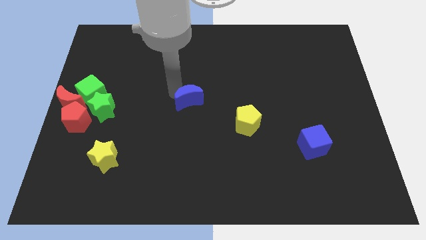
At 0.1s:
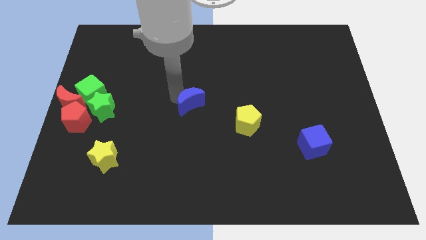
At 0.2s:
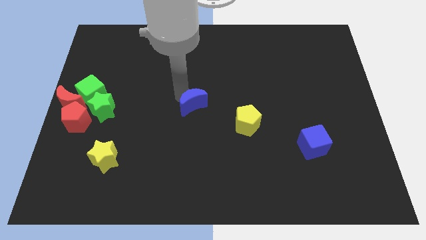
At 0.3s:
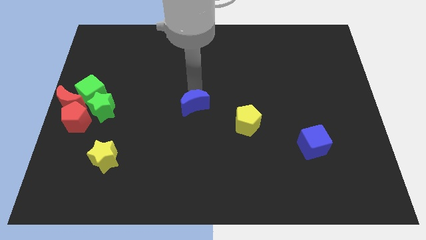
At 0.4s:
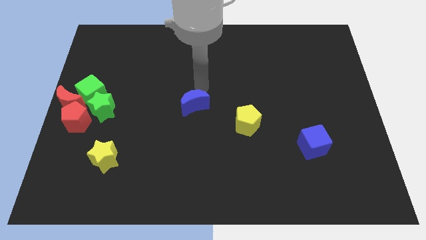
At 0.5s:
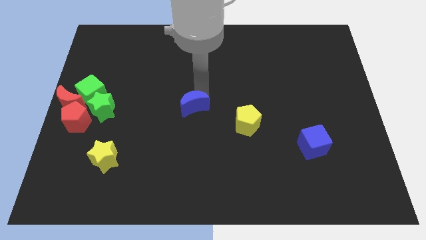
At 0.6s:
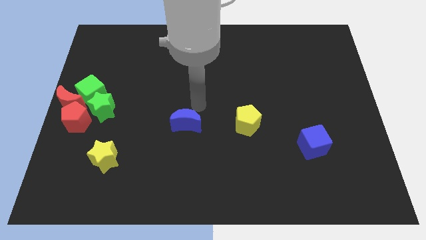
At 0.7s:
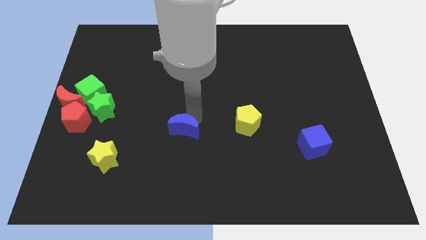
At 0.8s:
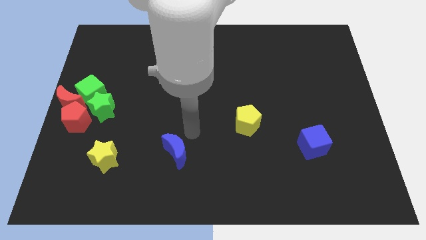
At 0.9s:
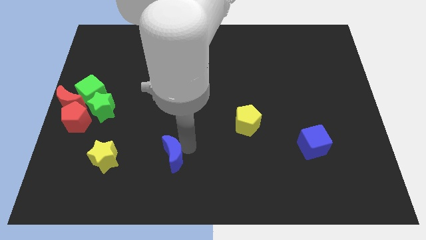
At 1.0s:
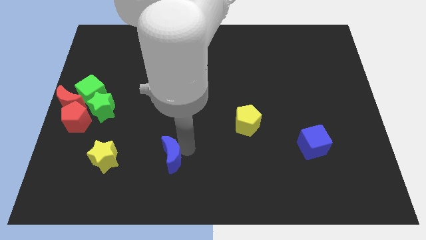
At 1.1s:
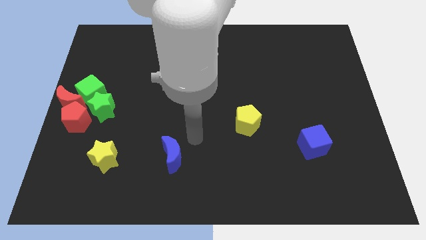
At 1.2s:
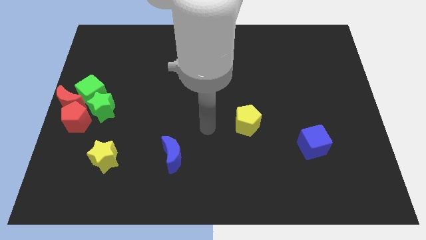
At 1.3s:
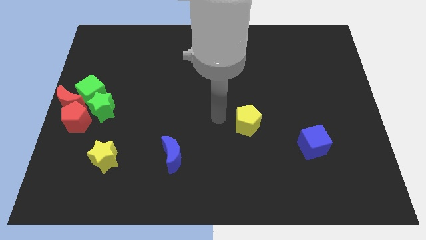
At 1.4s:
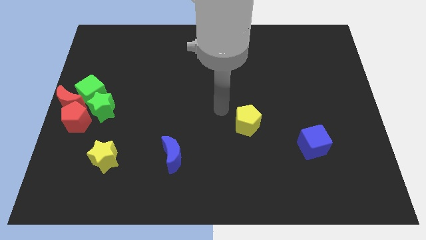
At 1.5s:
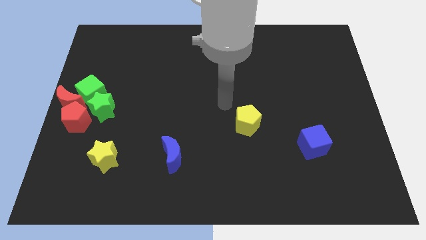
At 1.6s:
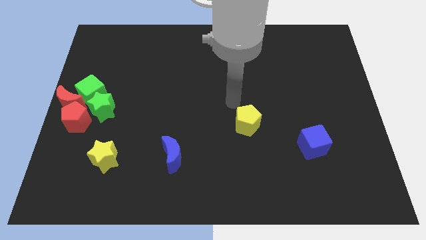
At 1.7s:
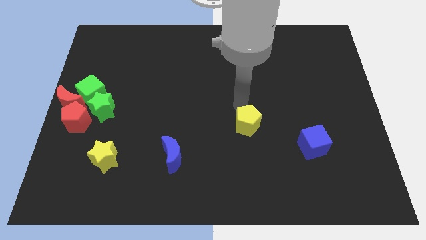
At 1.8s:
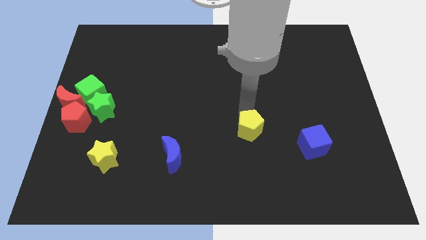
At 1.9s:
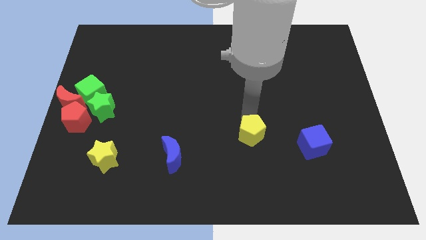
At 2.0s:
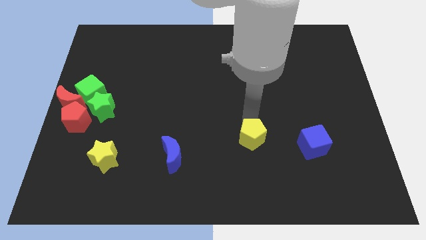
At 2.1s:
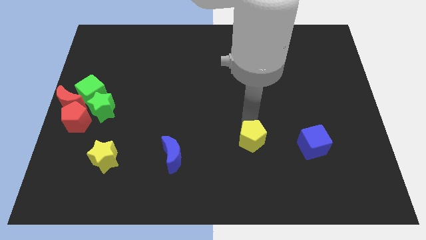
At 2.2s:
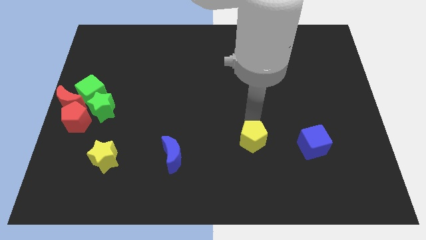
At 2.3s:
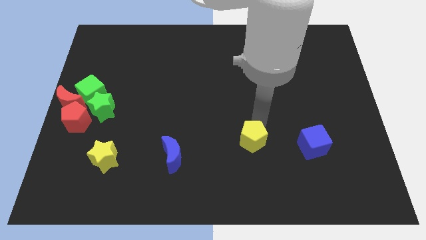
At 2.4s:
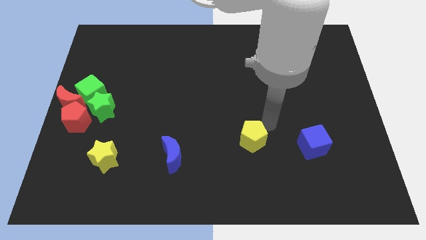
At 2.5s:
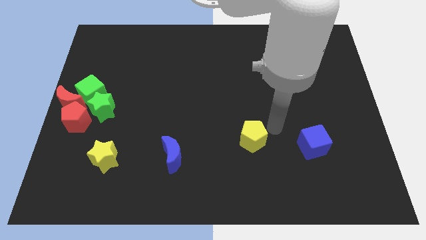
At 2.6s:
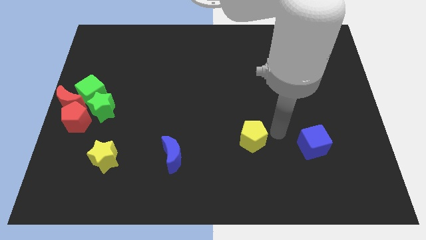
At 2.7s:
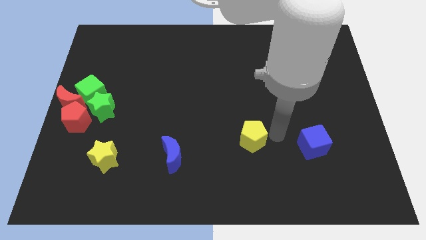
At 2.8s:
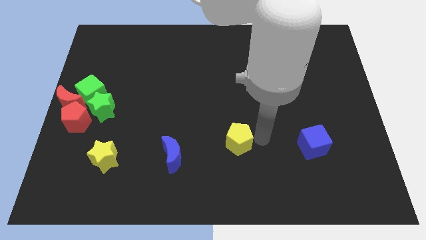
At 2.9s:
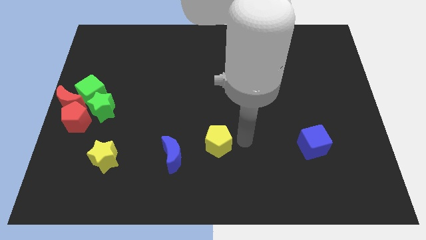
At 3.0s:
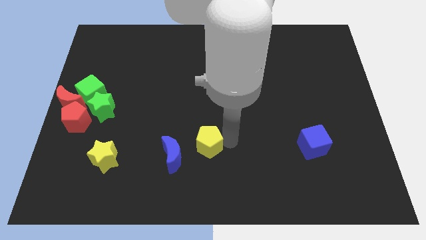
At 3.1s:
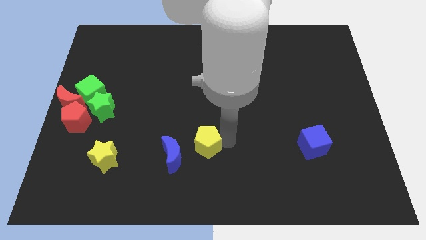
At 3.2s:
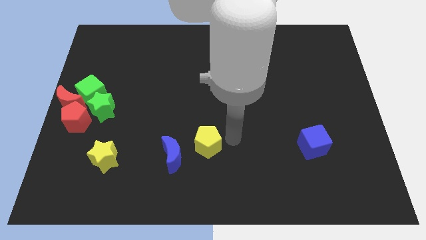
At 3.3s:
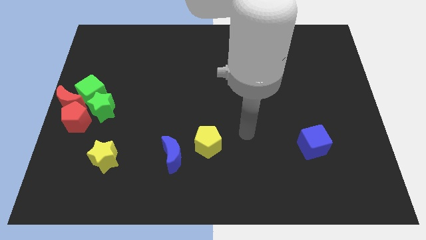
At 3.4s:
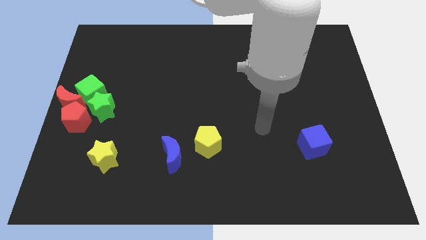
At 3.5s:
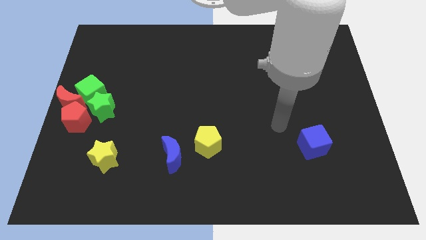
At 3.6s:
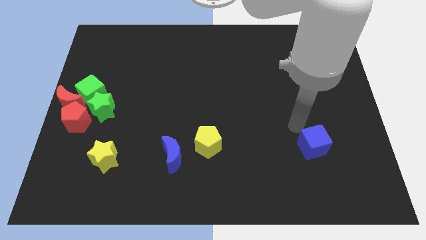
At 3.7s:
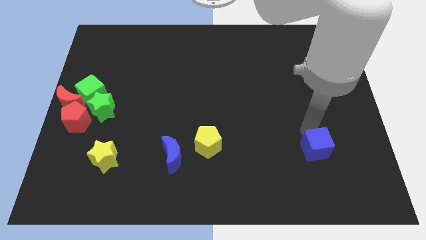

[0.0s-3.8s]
move the yellow pentagon close to the blue moon

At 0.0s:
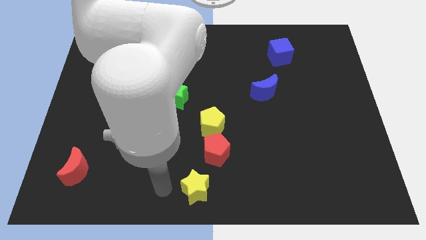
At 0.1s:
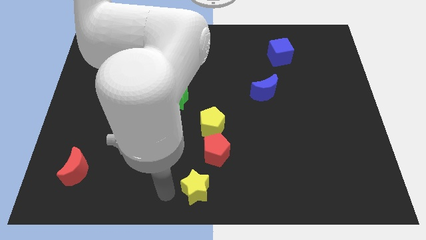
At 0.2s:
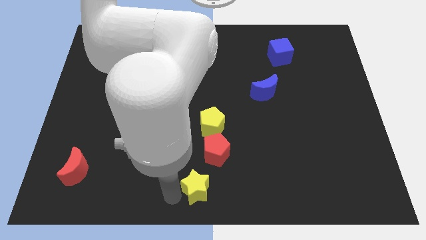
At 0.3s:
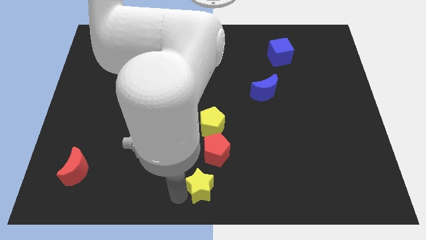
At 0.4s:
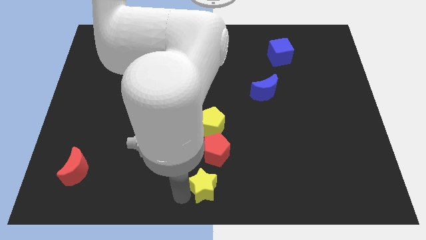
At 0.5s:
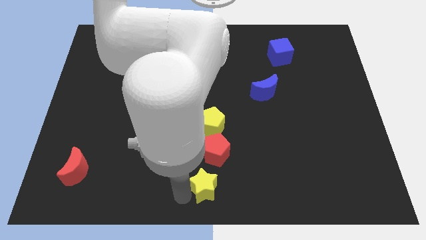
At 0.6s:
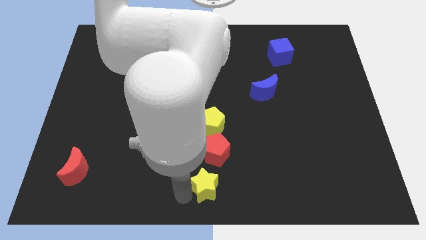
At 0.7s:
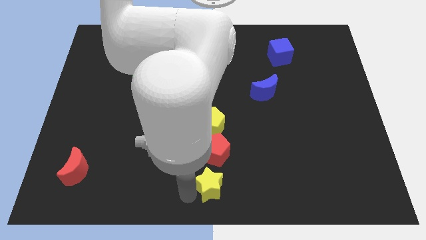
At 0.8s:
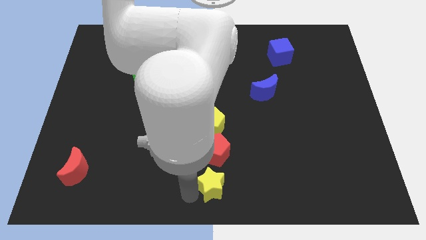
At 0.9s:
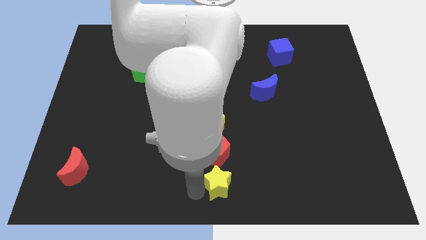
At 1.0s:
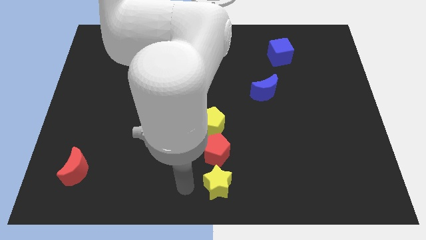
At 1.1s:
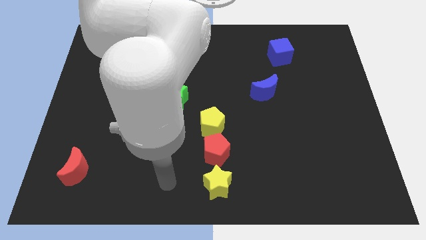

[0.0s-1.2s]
place the yellow star at the bottom of the red pentagon

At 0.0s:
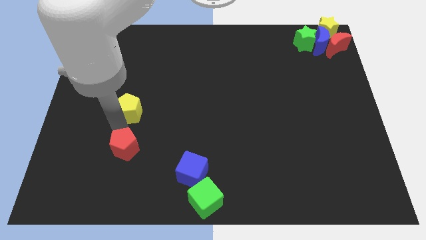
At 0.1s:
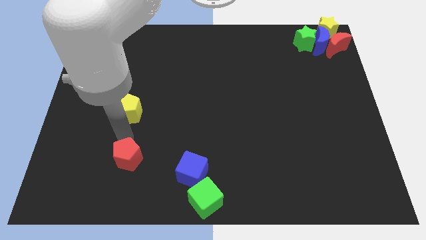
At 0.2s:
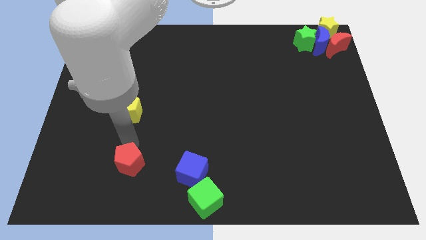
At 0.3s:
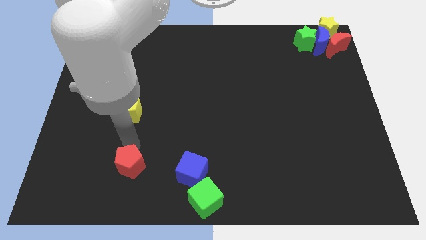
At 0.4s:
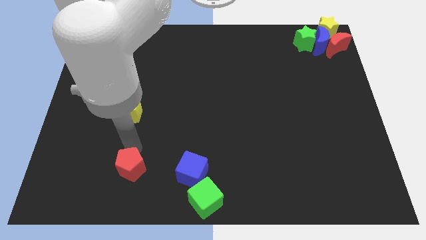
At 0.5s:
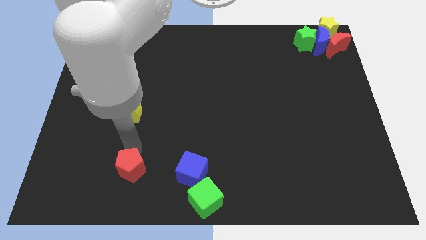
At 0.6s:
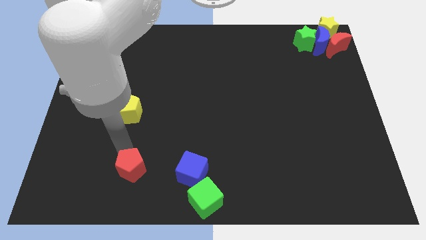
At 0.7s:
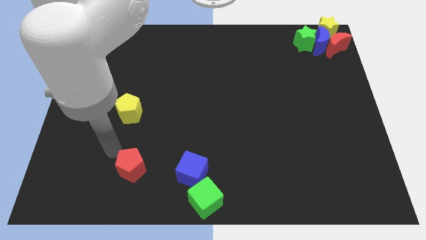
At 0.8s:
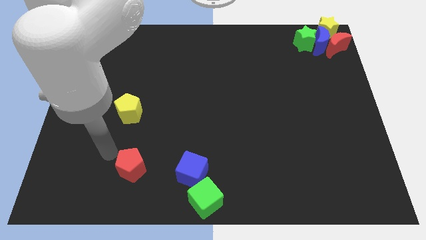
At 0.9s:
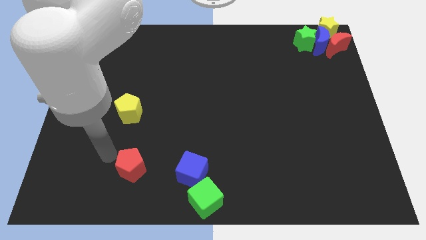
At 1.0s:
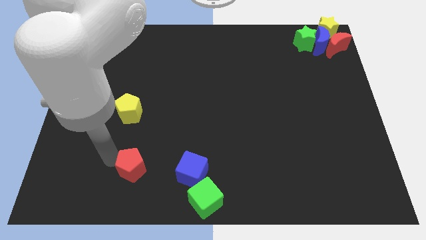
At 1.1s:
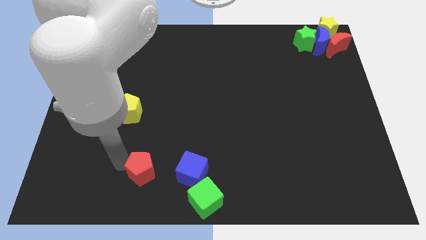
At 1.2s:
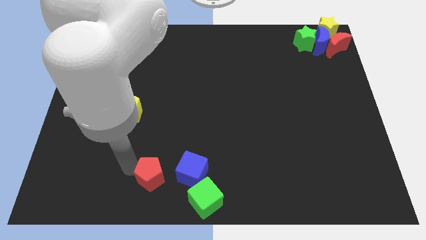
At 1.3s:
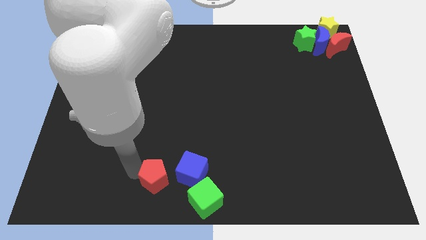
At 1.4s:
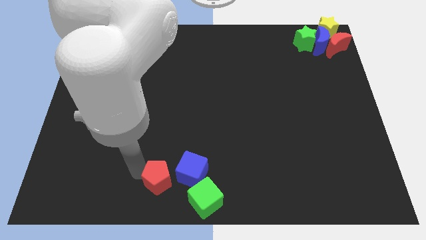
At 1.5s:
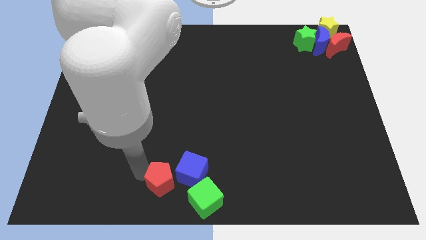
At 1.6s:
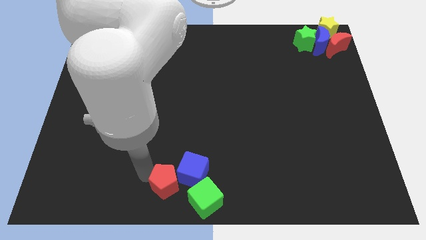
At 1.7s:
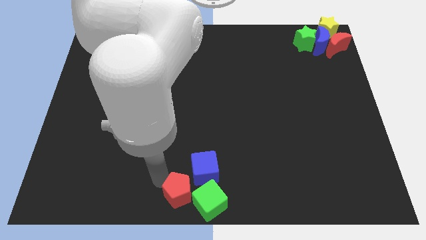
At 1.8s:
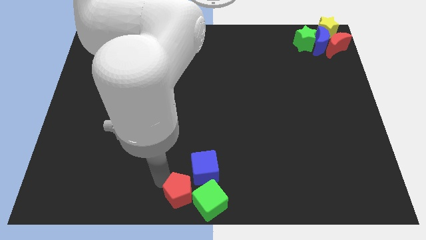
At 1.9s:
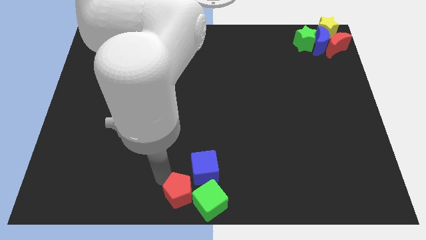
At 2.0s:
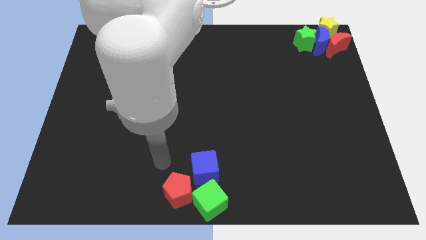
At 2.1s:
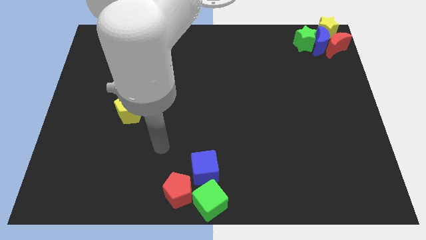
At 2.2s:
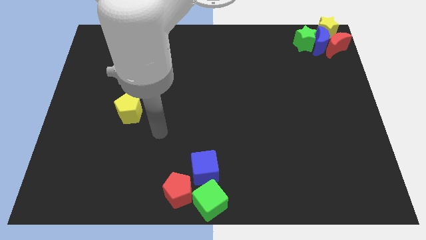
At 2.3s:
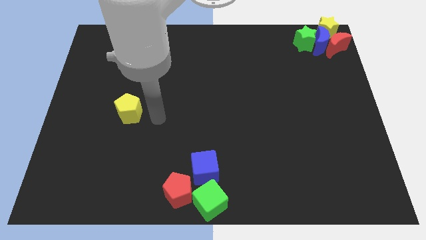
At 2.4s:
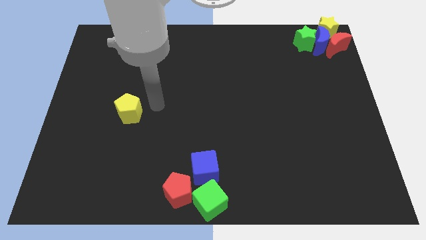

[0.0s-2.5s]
push the red pentagon into green cube

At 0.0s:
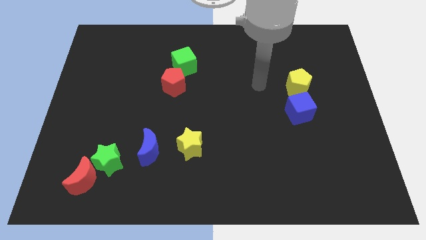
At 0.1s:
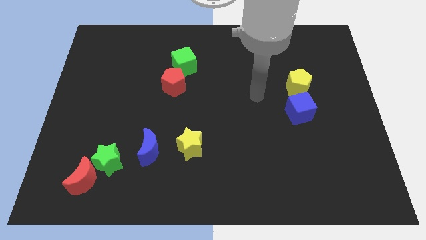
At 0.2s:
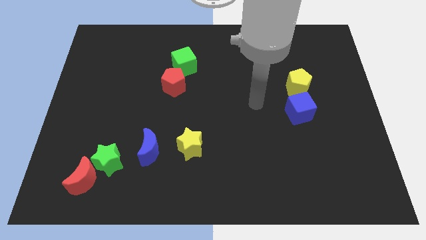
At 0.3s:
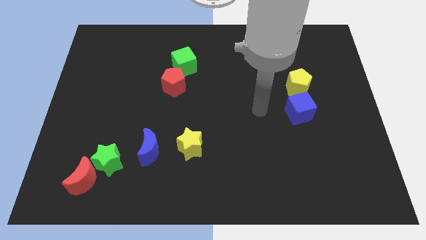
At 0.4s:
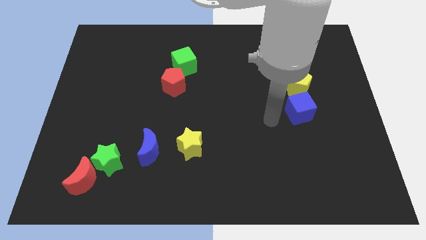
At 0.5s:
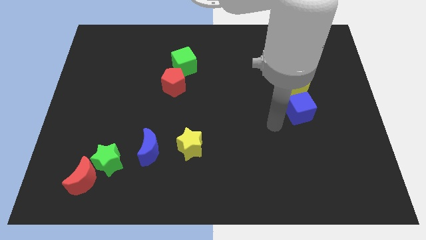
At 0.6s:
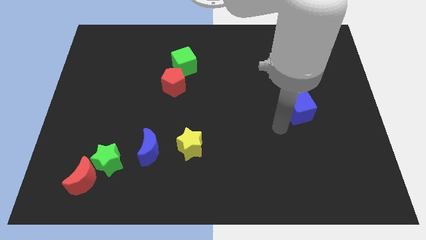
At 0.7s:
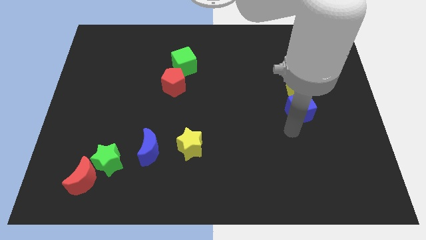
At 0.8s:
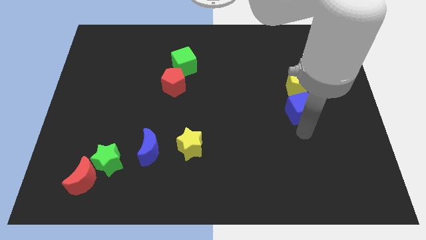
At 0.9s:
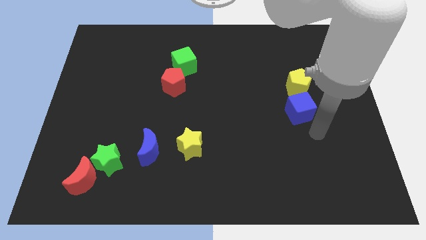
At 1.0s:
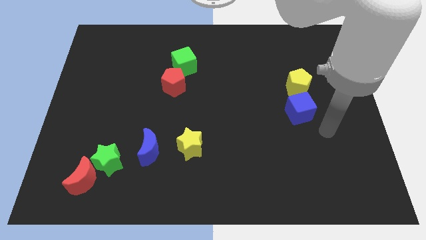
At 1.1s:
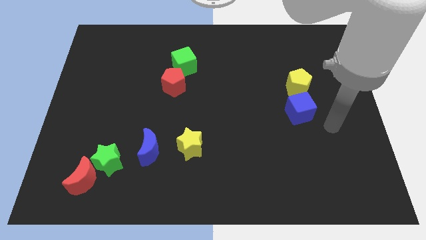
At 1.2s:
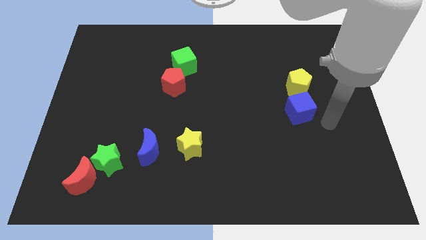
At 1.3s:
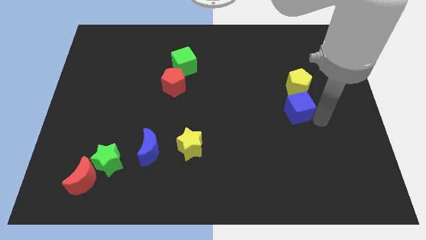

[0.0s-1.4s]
move the arm to the right center of the board
